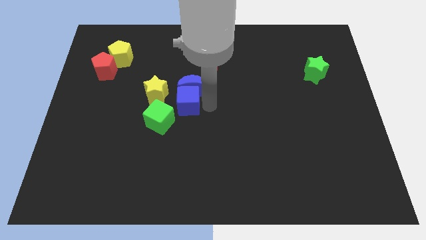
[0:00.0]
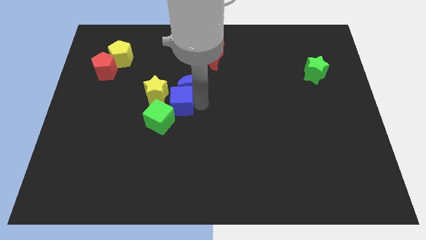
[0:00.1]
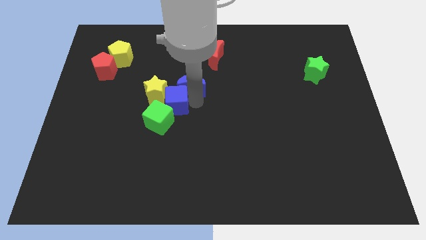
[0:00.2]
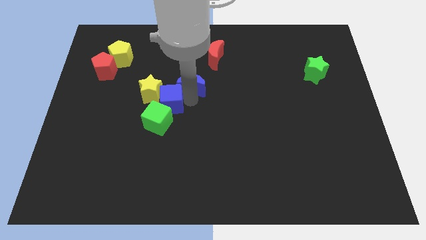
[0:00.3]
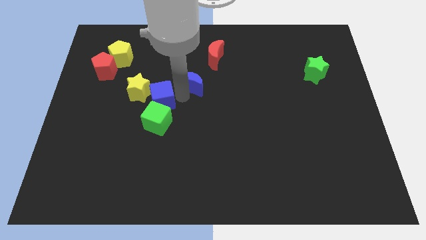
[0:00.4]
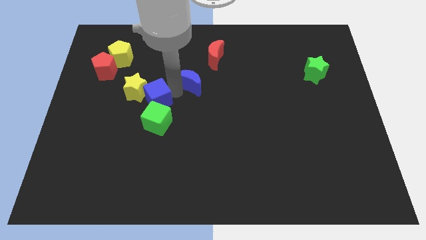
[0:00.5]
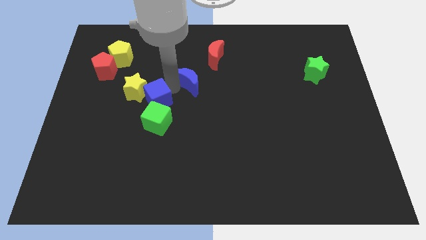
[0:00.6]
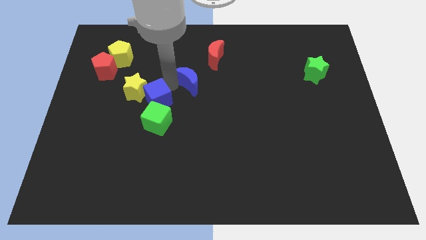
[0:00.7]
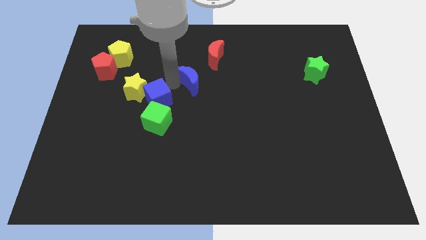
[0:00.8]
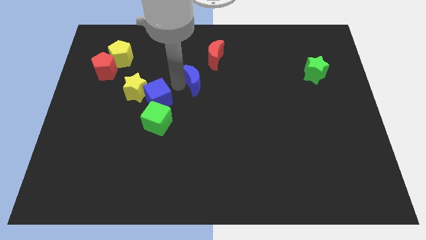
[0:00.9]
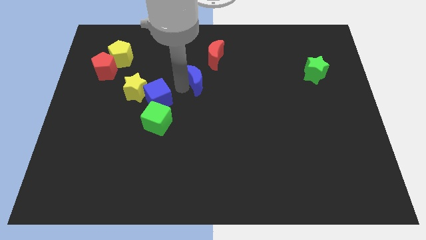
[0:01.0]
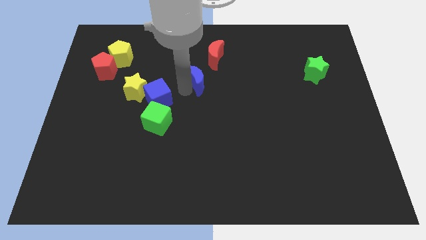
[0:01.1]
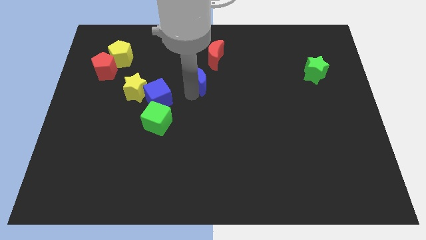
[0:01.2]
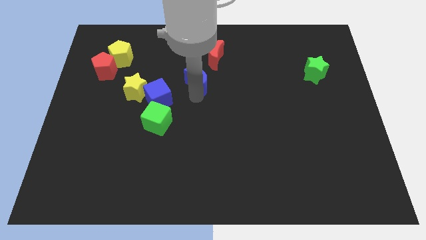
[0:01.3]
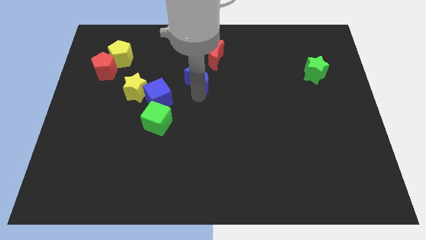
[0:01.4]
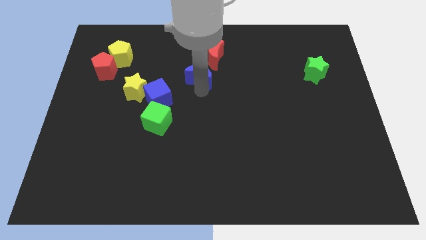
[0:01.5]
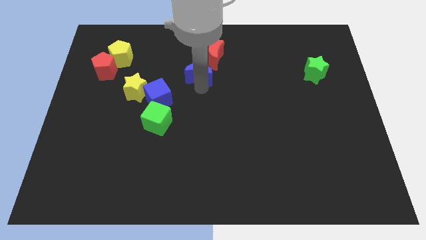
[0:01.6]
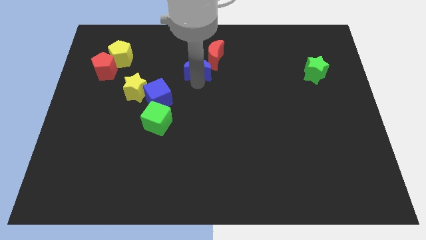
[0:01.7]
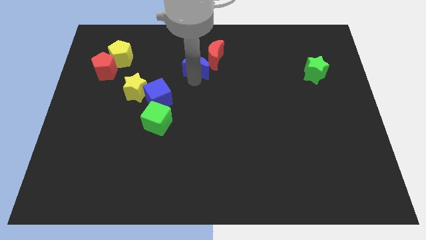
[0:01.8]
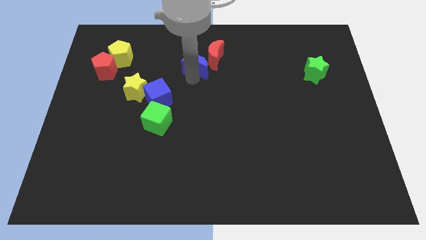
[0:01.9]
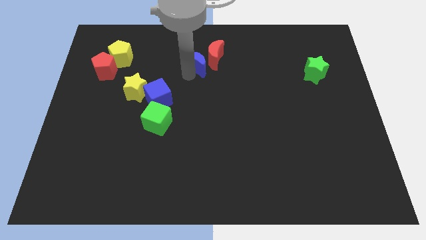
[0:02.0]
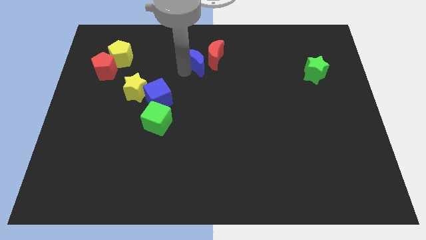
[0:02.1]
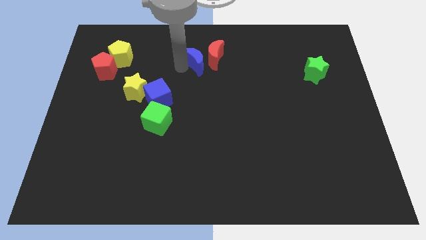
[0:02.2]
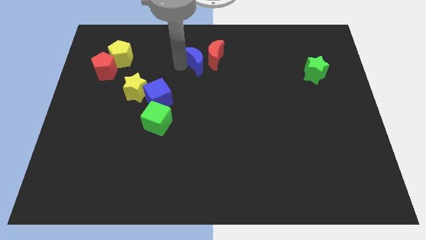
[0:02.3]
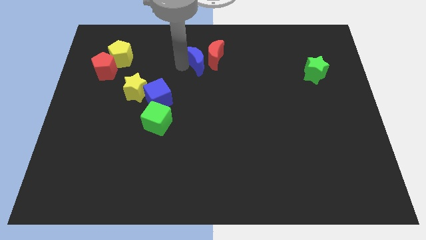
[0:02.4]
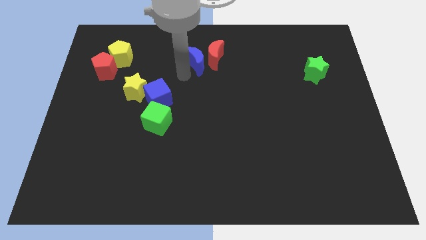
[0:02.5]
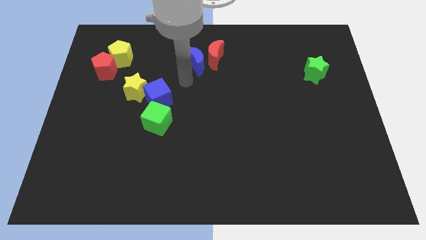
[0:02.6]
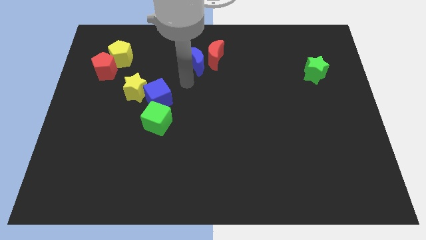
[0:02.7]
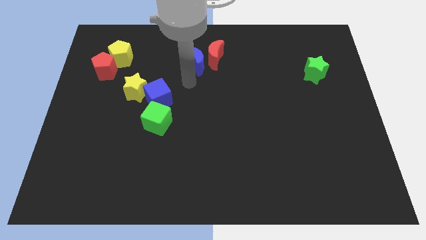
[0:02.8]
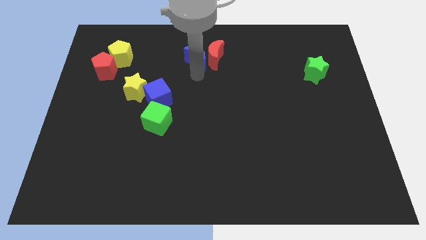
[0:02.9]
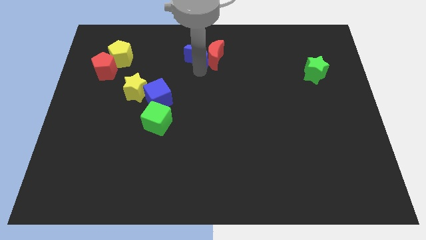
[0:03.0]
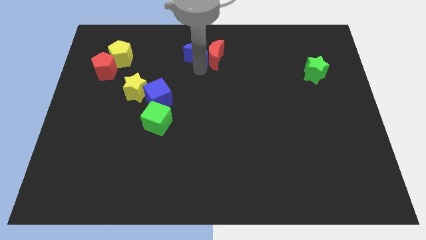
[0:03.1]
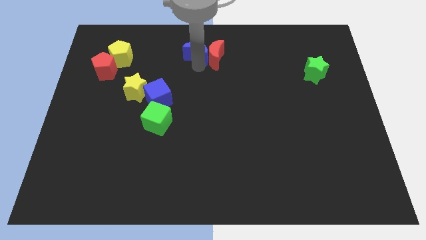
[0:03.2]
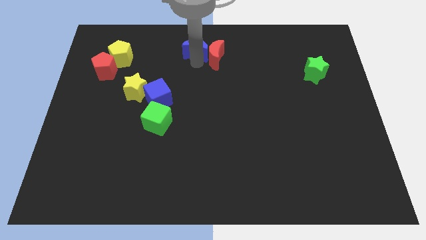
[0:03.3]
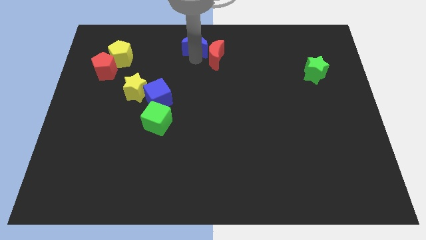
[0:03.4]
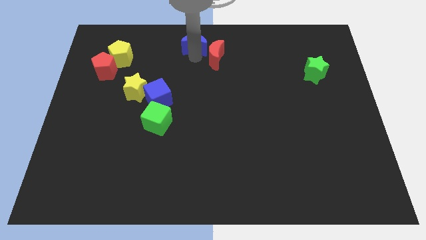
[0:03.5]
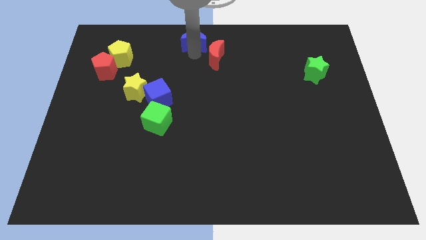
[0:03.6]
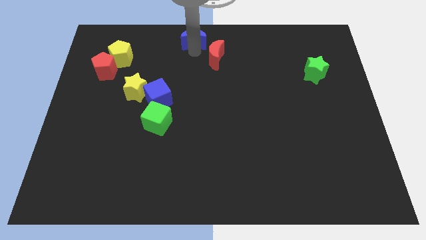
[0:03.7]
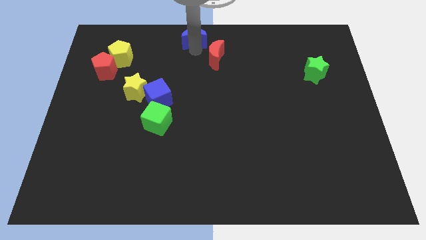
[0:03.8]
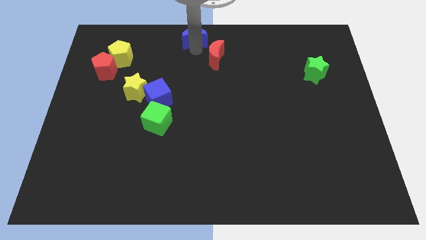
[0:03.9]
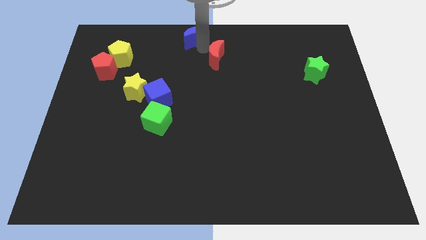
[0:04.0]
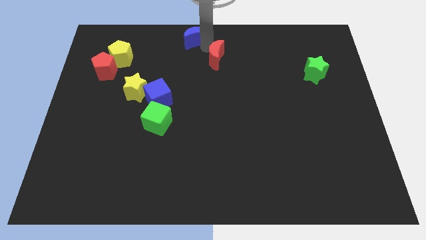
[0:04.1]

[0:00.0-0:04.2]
place the blue crescent near the top center

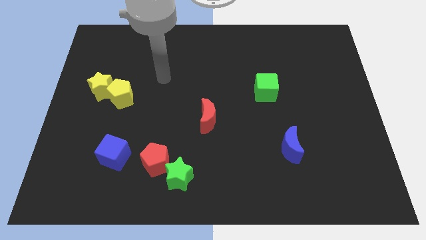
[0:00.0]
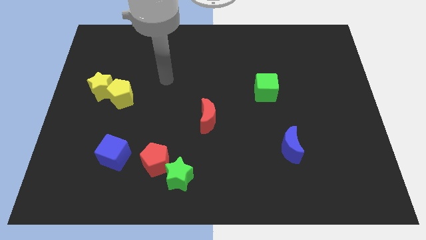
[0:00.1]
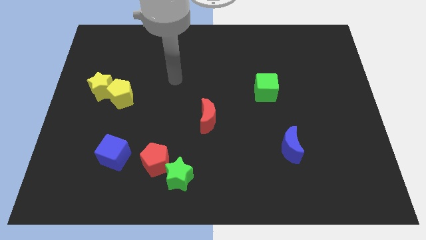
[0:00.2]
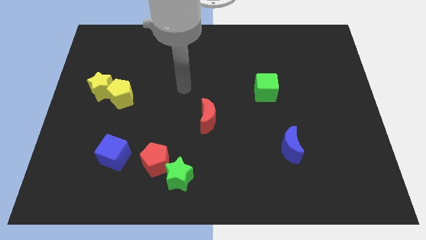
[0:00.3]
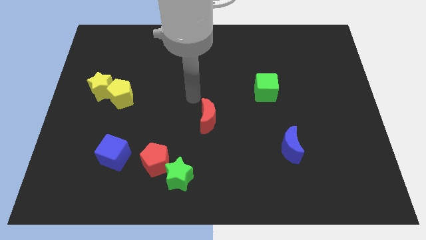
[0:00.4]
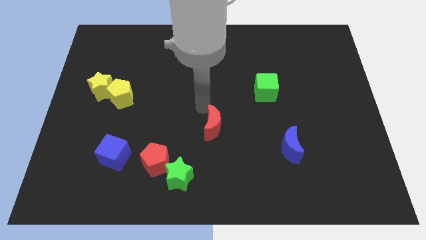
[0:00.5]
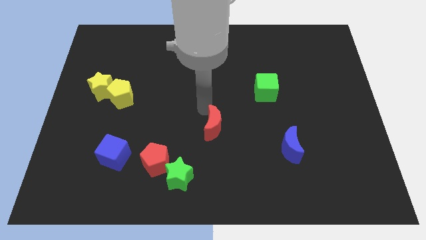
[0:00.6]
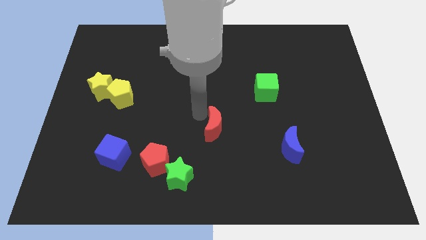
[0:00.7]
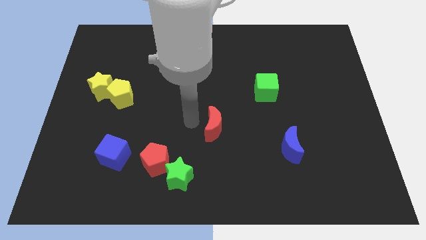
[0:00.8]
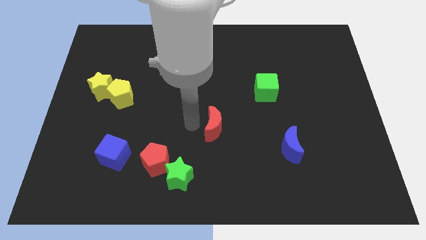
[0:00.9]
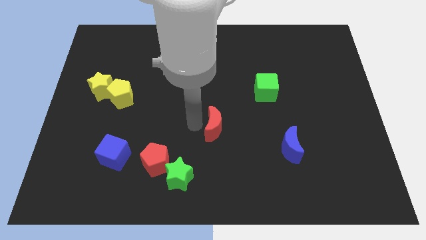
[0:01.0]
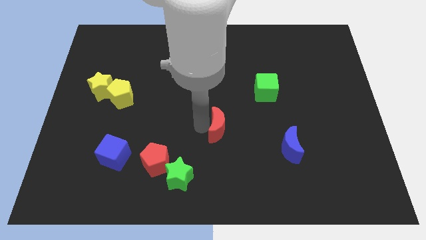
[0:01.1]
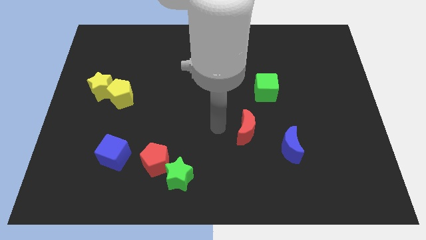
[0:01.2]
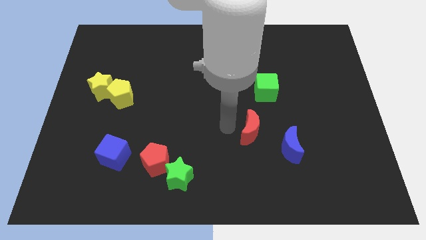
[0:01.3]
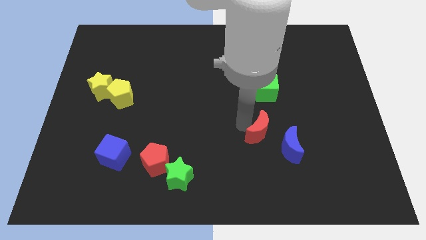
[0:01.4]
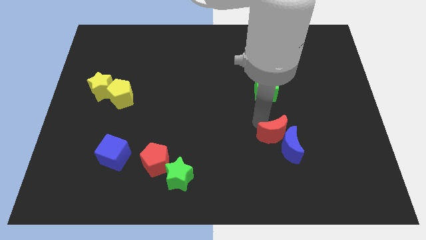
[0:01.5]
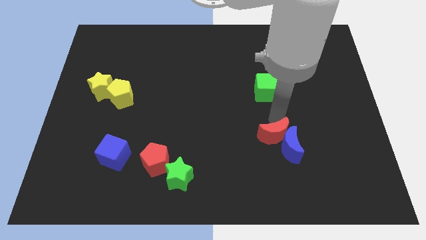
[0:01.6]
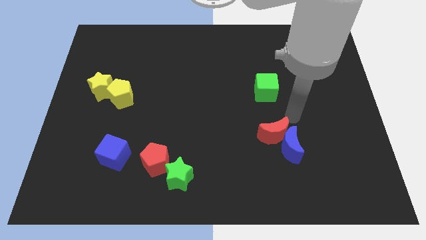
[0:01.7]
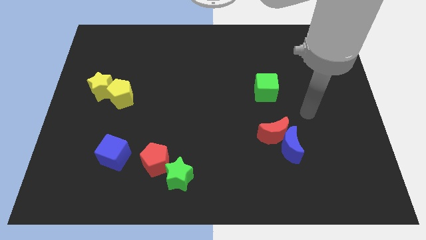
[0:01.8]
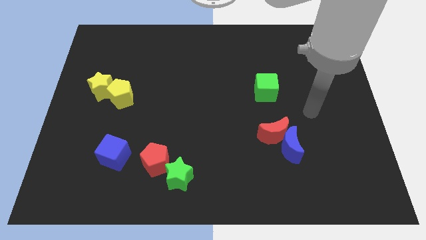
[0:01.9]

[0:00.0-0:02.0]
move the red crescent into the blue crescent

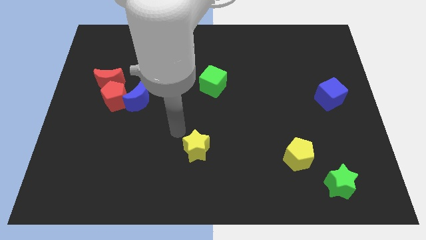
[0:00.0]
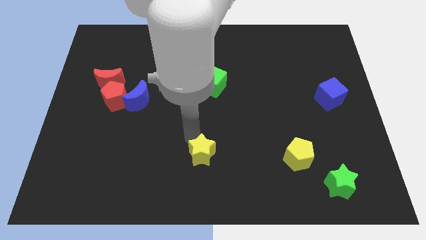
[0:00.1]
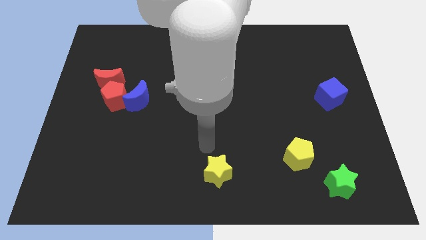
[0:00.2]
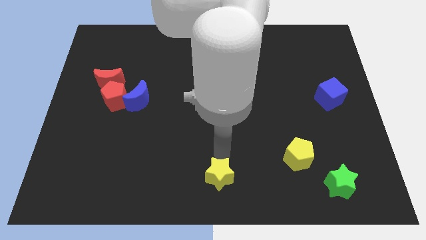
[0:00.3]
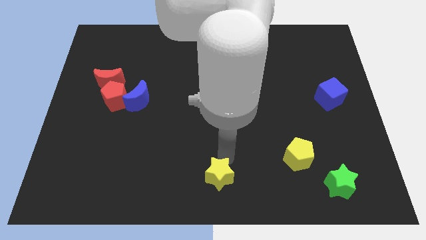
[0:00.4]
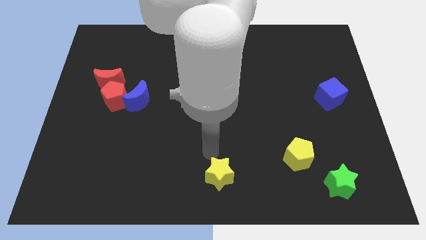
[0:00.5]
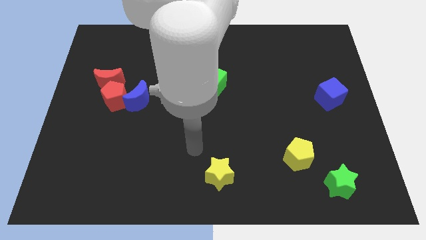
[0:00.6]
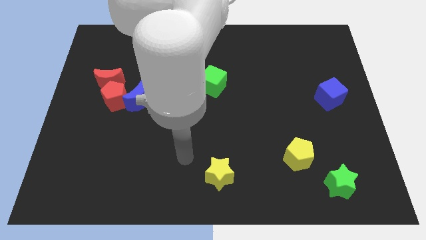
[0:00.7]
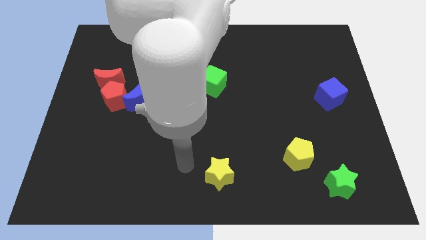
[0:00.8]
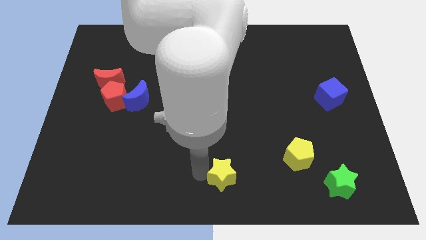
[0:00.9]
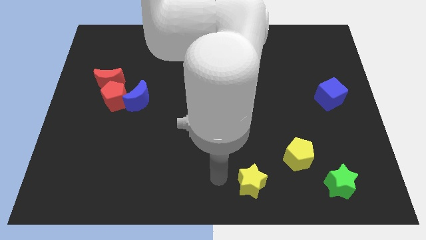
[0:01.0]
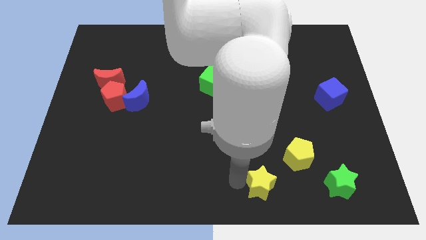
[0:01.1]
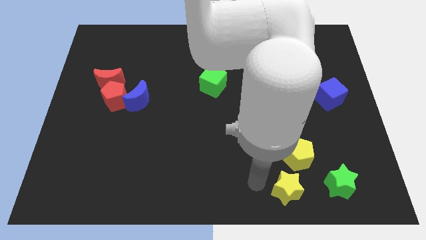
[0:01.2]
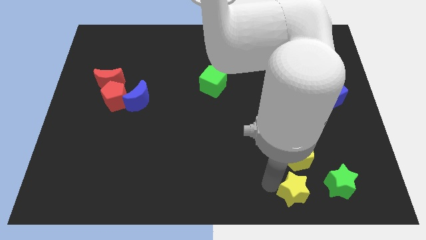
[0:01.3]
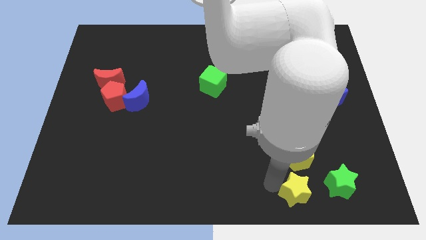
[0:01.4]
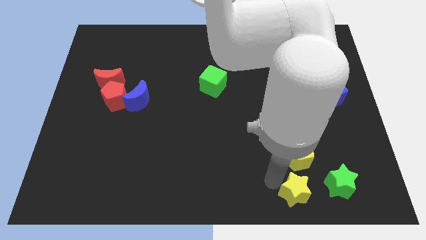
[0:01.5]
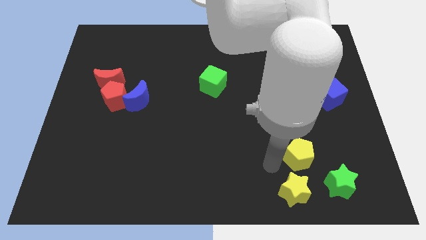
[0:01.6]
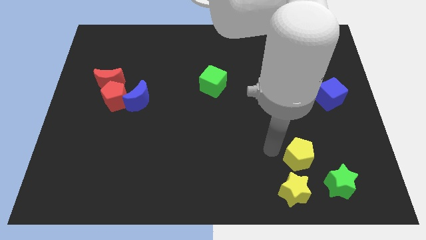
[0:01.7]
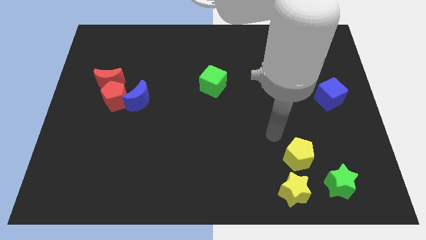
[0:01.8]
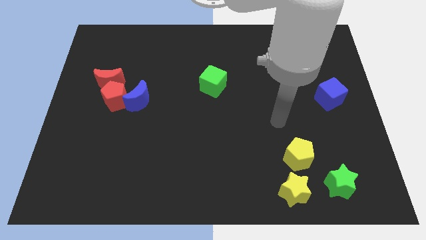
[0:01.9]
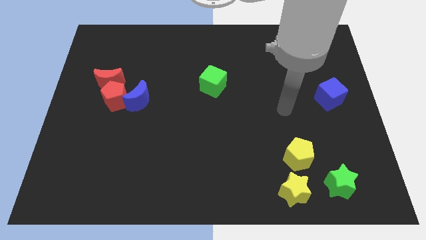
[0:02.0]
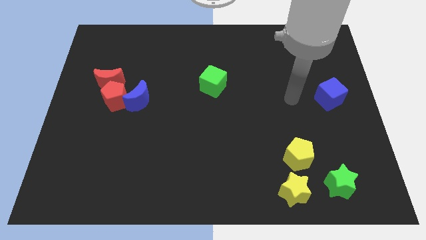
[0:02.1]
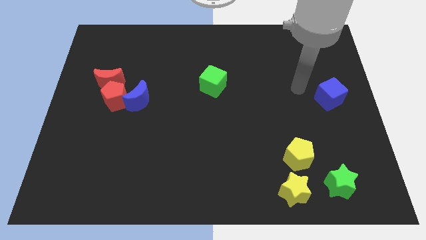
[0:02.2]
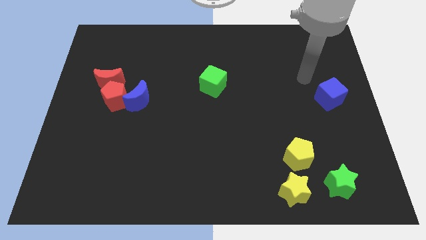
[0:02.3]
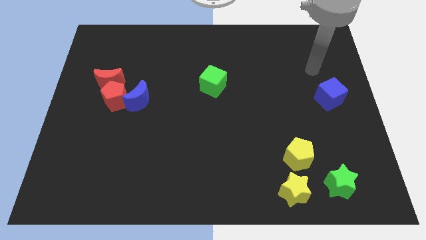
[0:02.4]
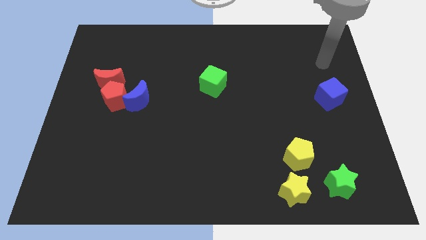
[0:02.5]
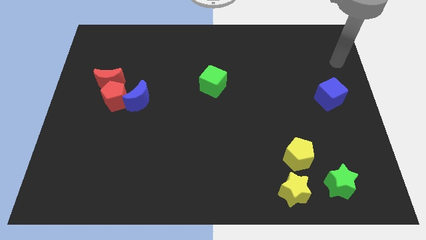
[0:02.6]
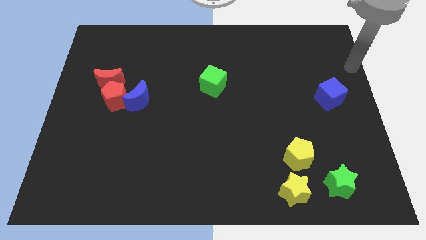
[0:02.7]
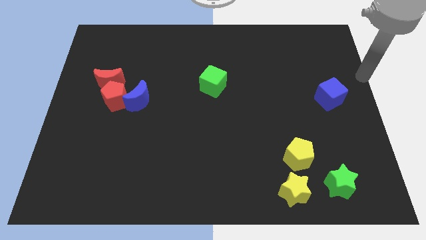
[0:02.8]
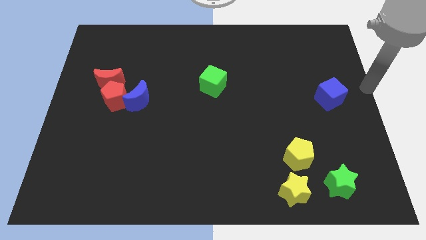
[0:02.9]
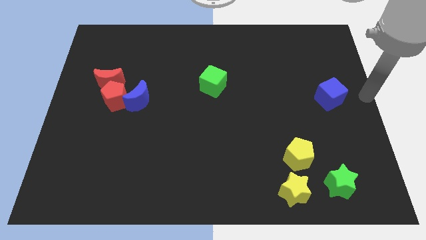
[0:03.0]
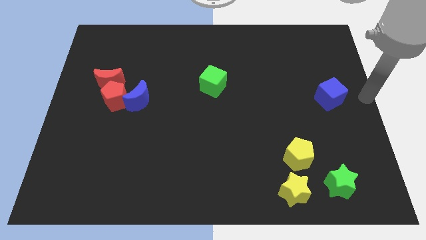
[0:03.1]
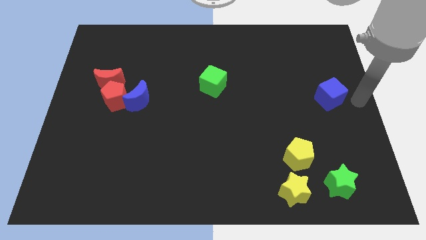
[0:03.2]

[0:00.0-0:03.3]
place the yellow star at the bottom of the yellow pentagon
